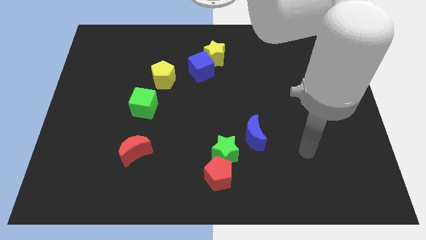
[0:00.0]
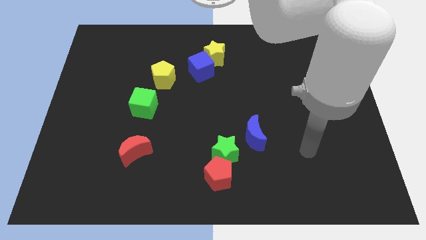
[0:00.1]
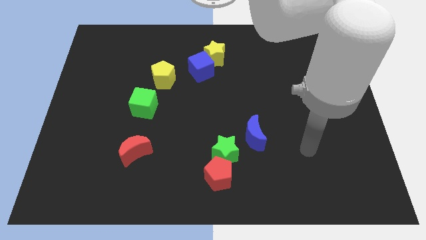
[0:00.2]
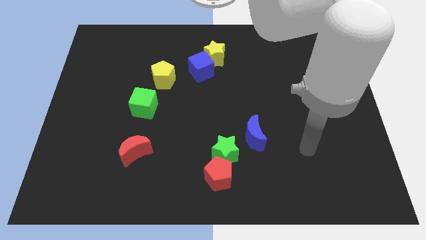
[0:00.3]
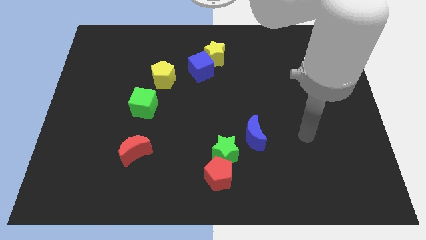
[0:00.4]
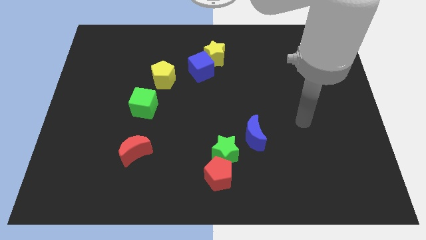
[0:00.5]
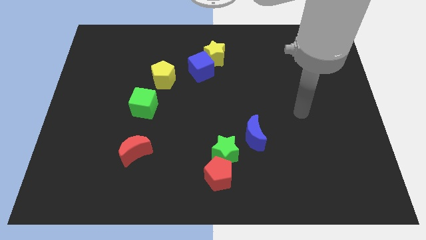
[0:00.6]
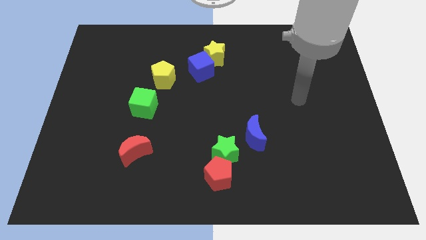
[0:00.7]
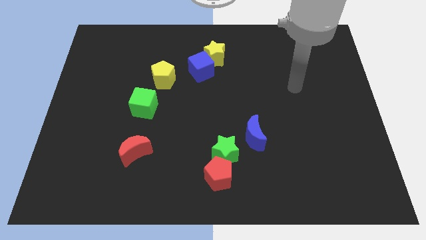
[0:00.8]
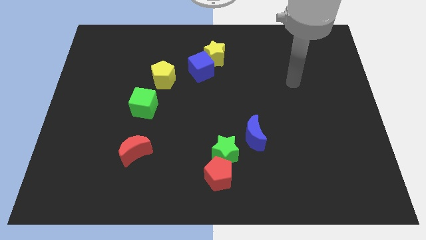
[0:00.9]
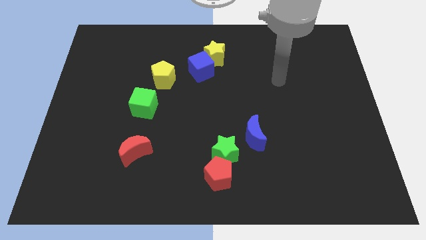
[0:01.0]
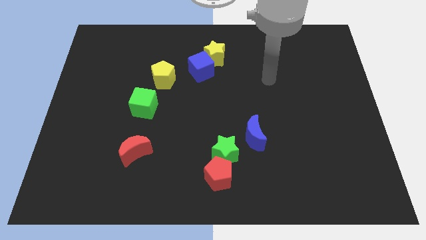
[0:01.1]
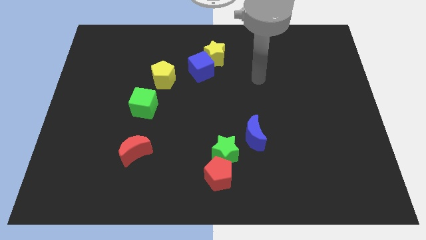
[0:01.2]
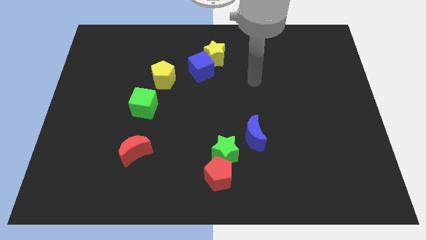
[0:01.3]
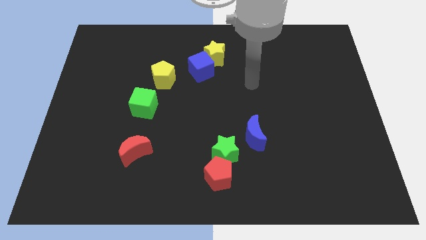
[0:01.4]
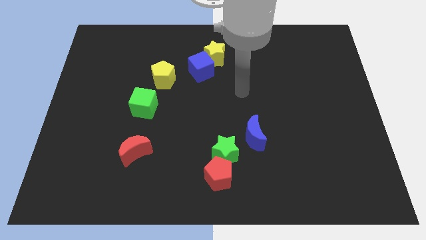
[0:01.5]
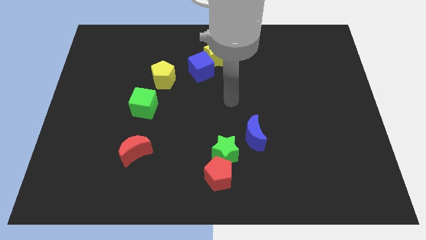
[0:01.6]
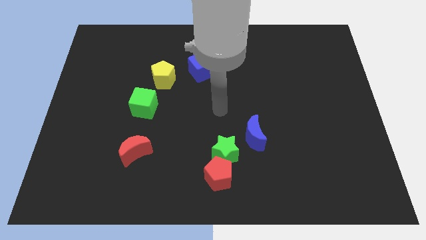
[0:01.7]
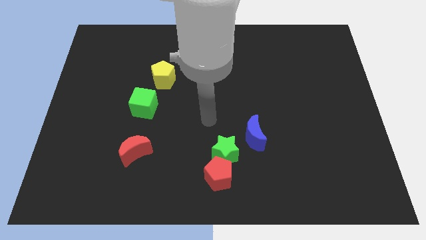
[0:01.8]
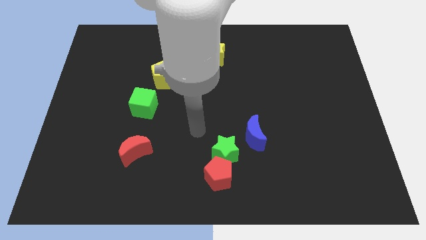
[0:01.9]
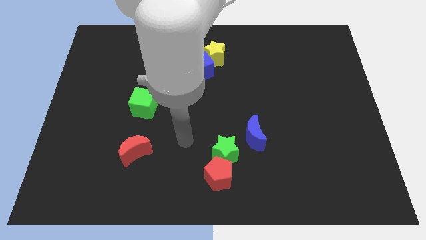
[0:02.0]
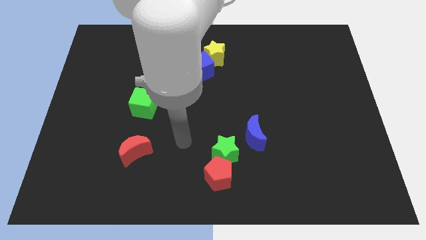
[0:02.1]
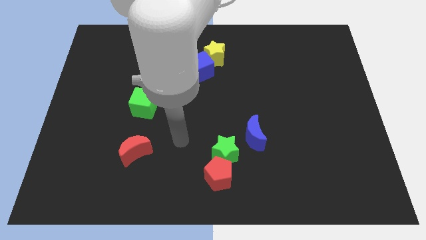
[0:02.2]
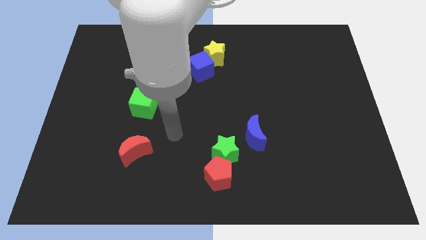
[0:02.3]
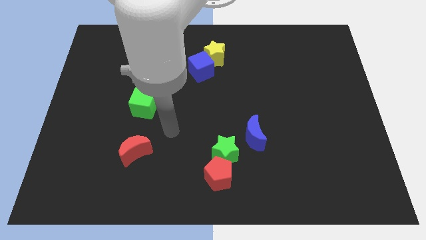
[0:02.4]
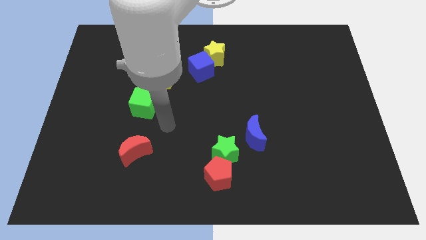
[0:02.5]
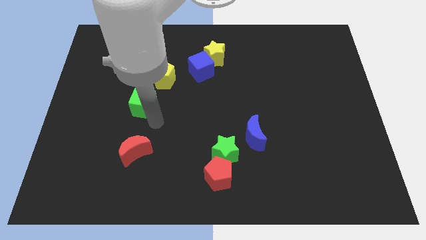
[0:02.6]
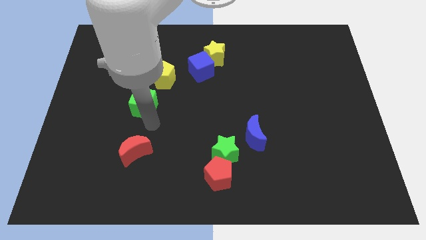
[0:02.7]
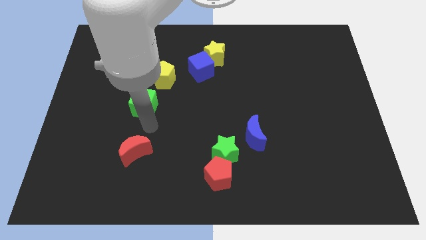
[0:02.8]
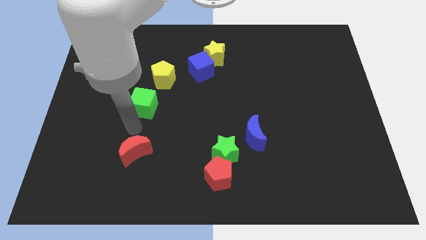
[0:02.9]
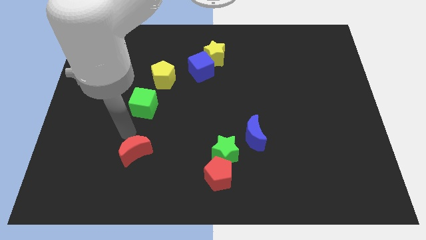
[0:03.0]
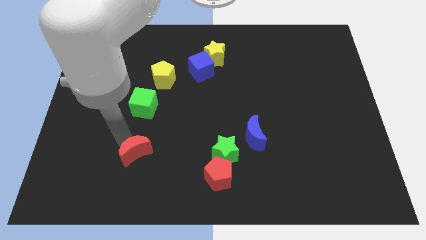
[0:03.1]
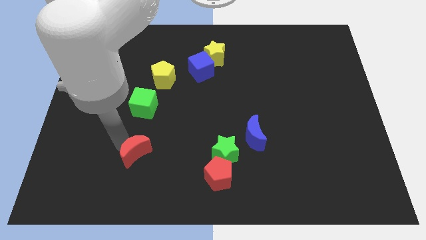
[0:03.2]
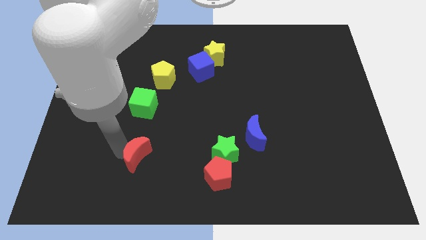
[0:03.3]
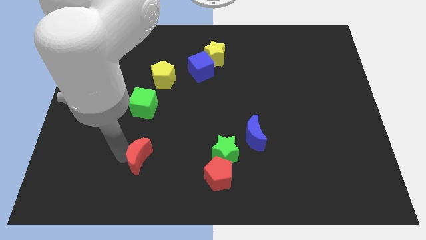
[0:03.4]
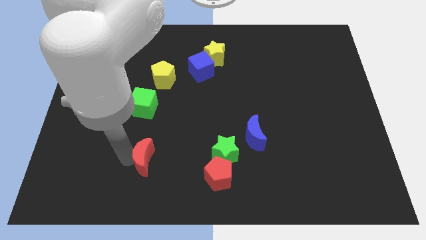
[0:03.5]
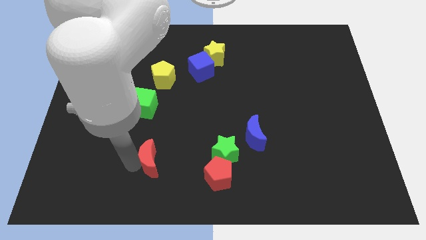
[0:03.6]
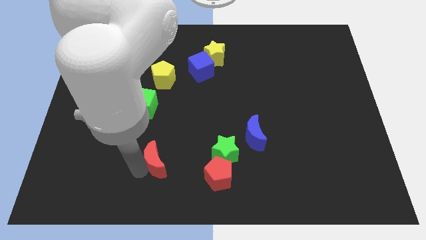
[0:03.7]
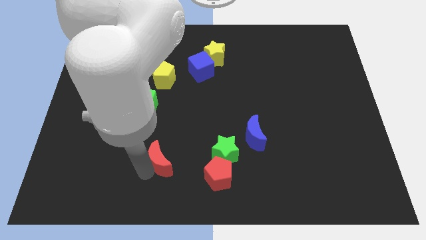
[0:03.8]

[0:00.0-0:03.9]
slight push the red moon

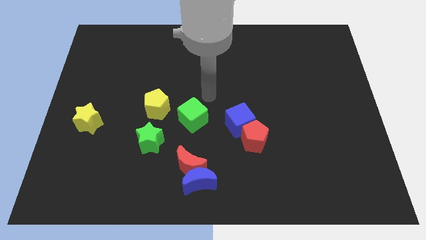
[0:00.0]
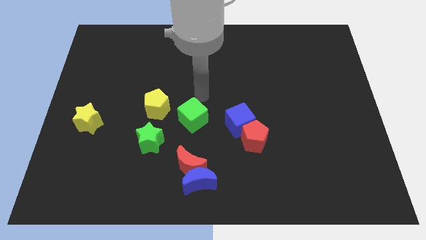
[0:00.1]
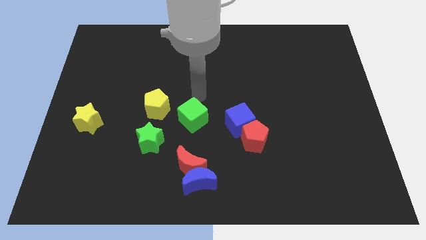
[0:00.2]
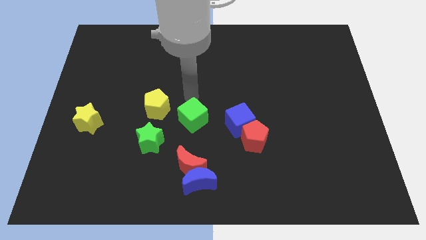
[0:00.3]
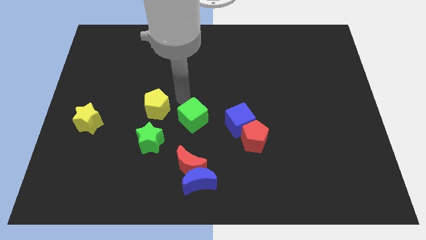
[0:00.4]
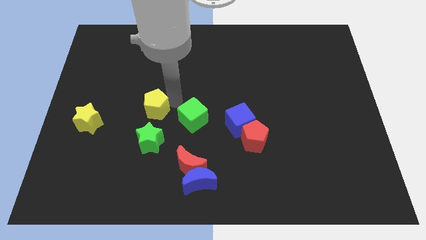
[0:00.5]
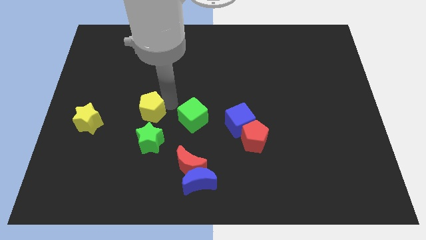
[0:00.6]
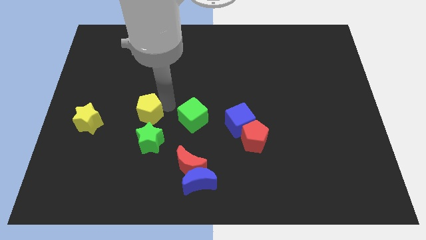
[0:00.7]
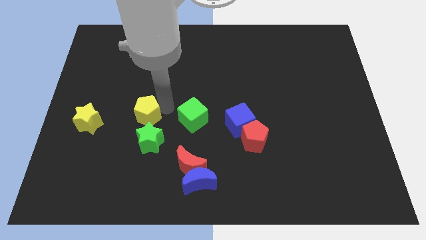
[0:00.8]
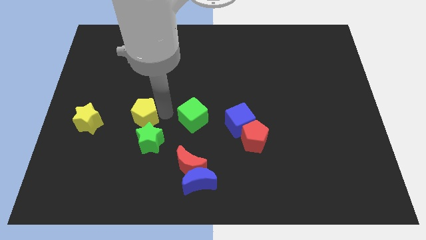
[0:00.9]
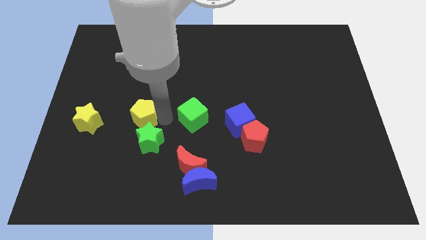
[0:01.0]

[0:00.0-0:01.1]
push the yellow pentagon close to the green star

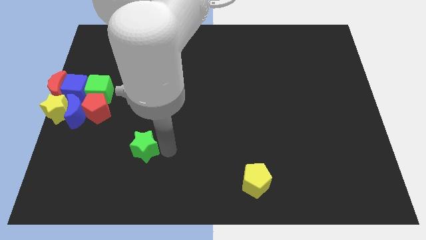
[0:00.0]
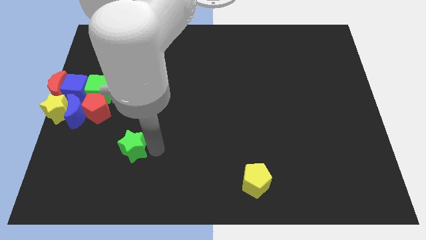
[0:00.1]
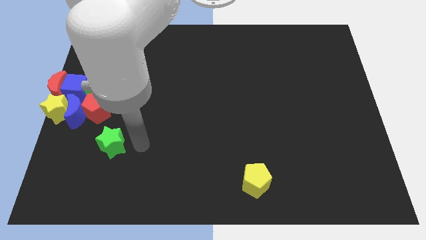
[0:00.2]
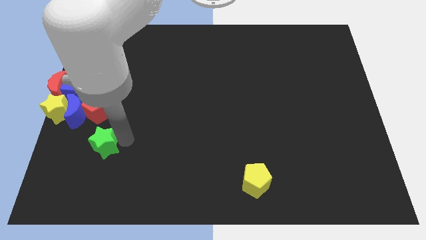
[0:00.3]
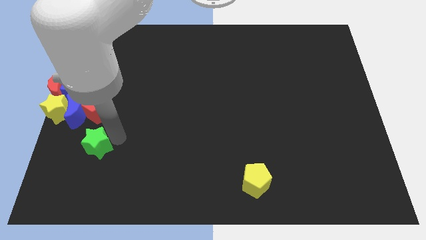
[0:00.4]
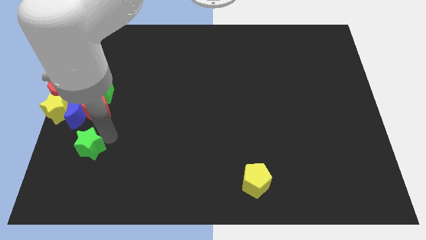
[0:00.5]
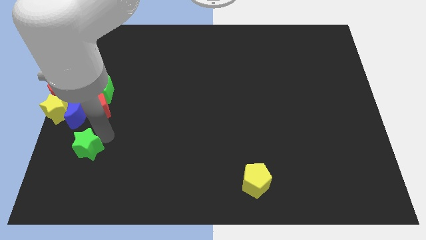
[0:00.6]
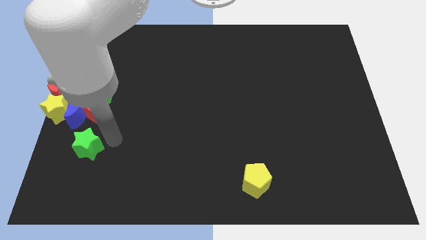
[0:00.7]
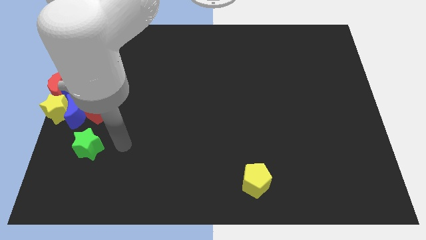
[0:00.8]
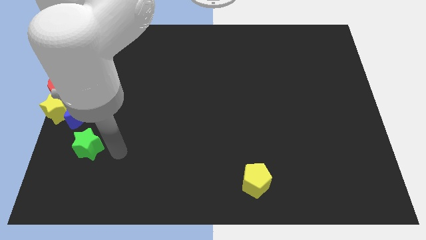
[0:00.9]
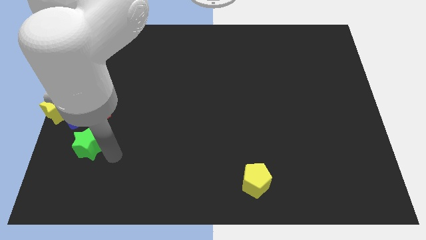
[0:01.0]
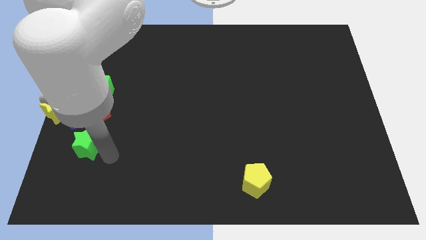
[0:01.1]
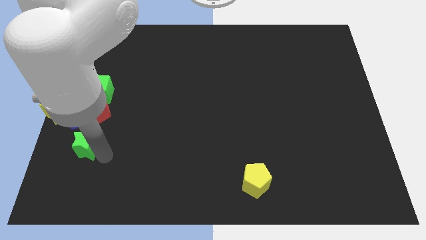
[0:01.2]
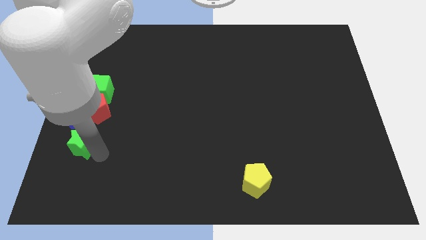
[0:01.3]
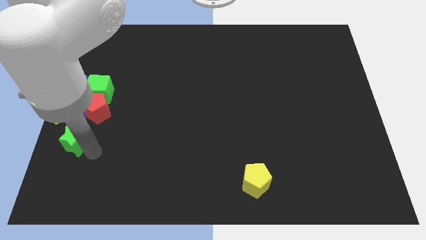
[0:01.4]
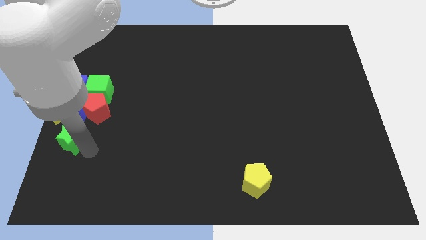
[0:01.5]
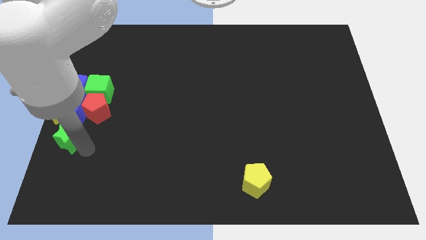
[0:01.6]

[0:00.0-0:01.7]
push green star below blue crescent

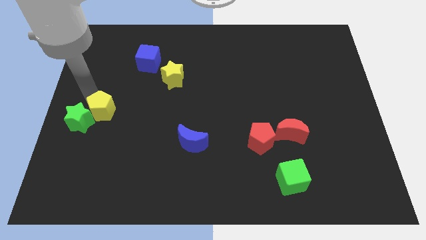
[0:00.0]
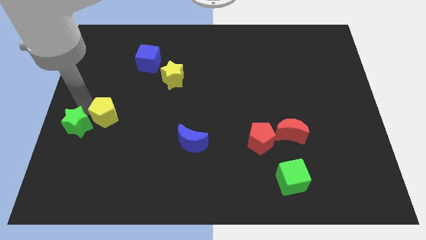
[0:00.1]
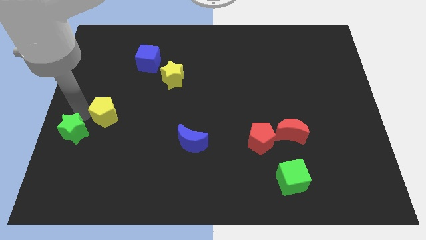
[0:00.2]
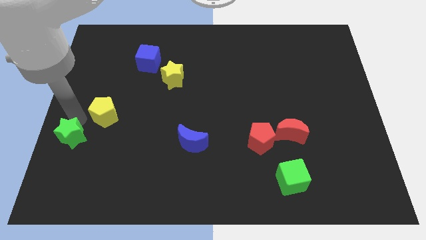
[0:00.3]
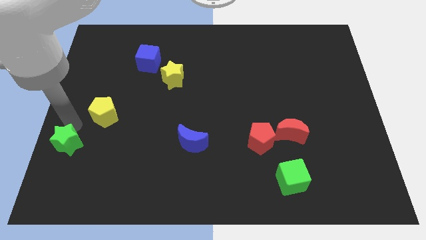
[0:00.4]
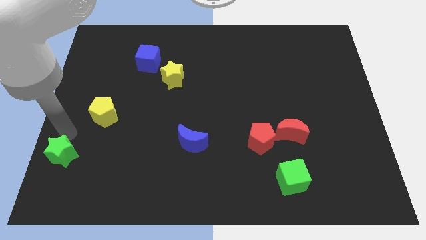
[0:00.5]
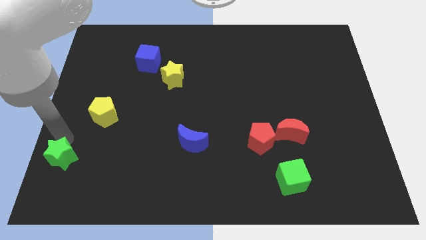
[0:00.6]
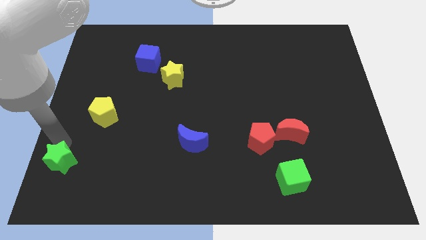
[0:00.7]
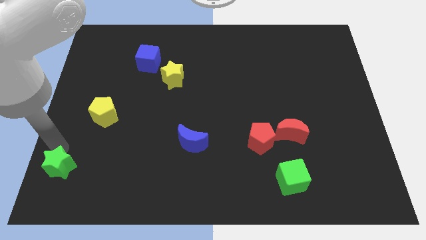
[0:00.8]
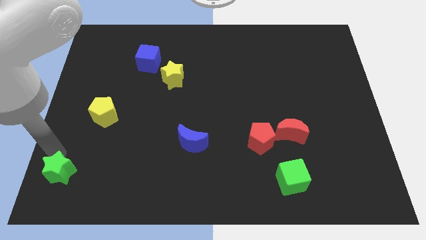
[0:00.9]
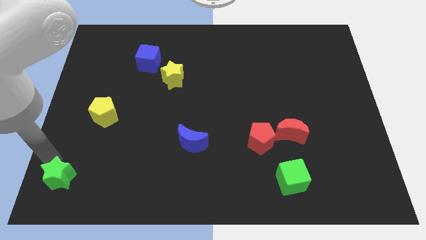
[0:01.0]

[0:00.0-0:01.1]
separate the green star from the yellow pentagon

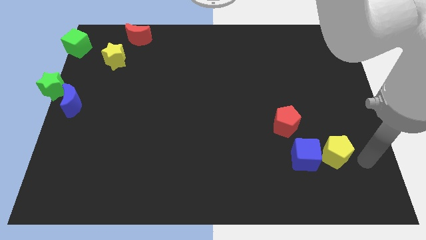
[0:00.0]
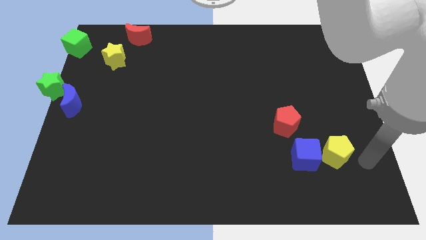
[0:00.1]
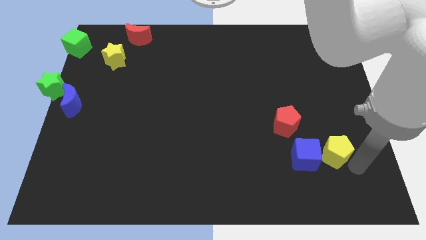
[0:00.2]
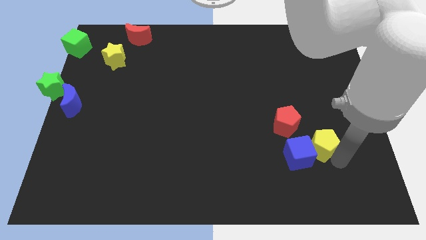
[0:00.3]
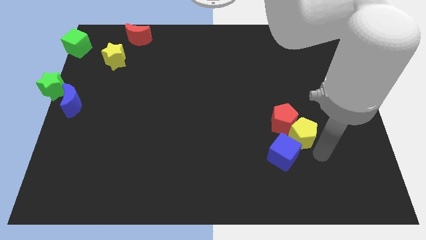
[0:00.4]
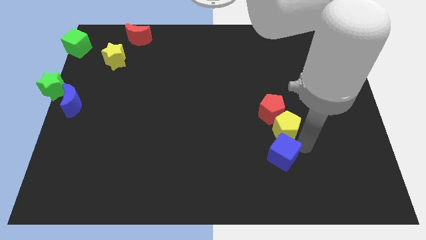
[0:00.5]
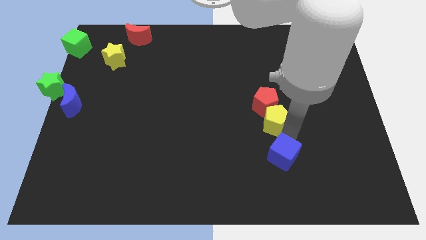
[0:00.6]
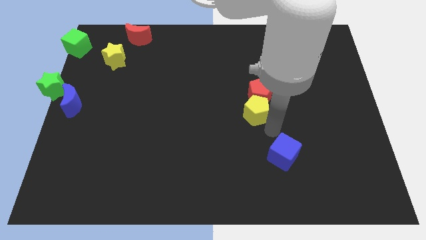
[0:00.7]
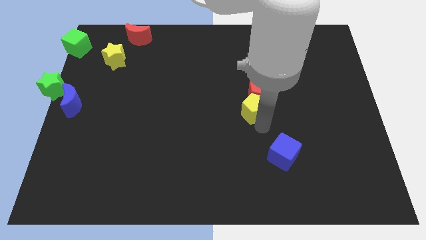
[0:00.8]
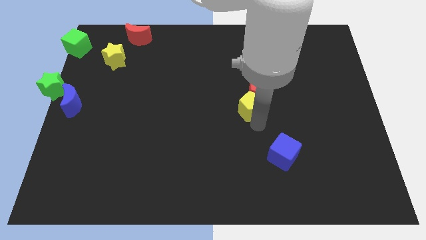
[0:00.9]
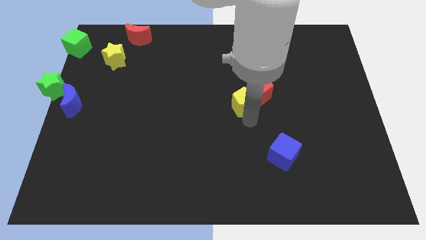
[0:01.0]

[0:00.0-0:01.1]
slide yellow pentagon into red pentagon
